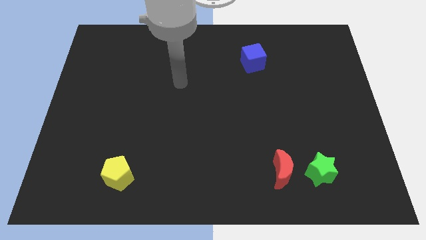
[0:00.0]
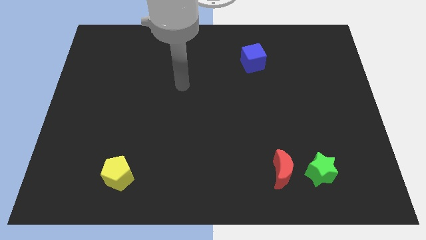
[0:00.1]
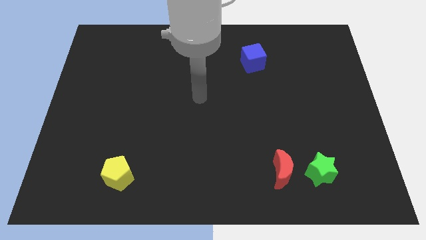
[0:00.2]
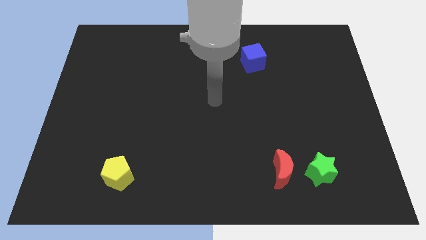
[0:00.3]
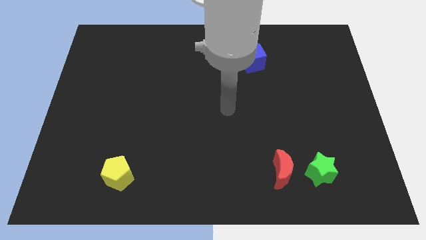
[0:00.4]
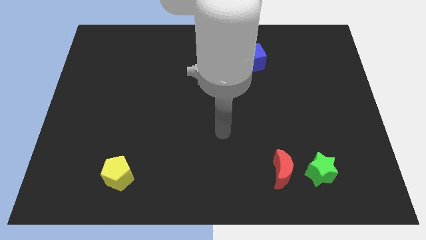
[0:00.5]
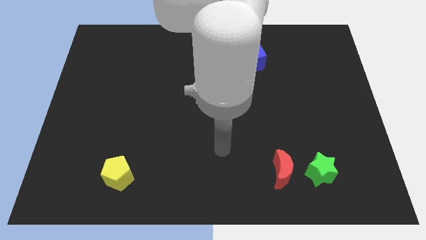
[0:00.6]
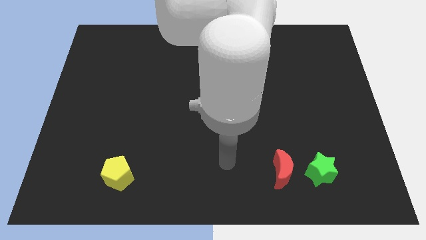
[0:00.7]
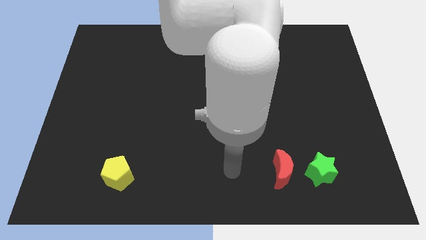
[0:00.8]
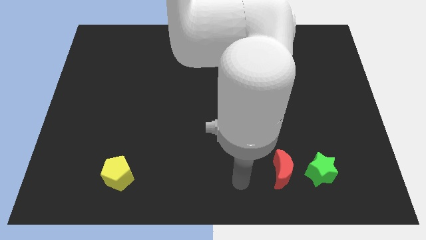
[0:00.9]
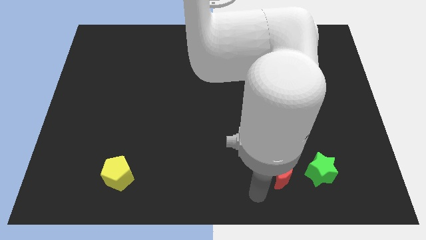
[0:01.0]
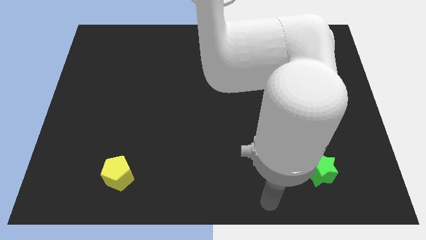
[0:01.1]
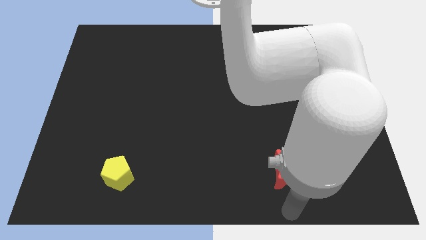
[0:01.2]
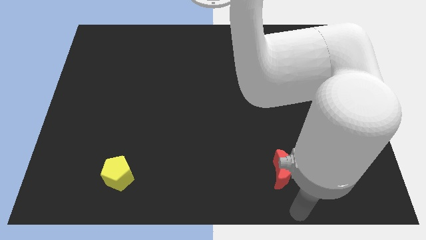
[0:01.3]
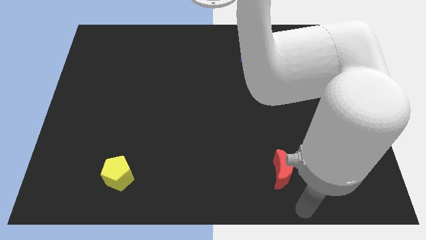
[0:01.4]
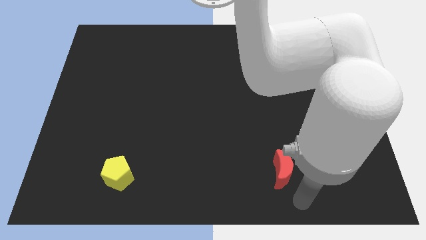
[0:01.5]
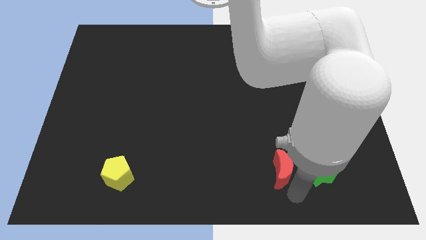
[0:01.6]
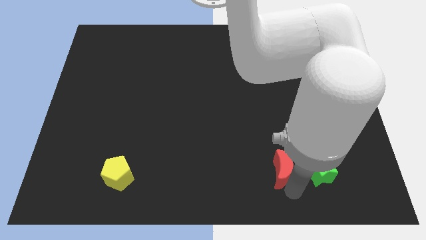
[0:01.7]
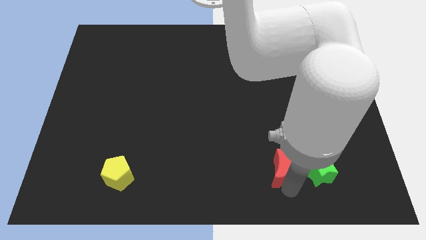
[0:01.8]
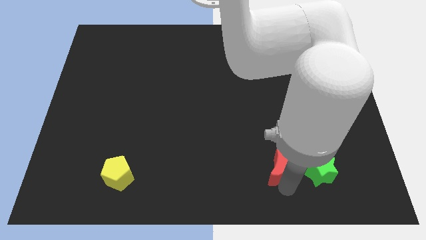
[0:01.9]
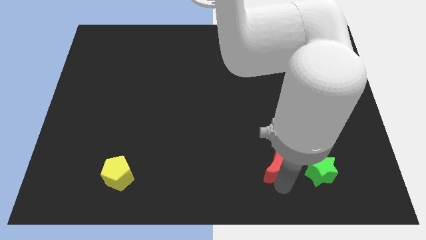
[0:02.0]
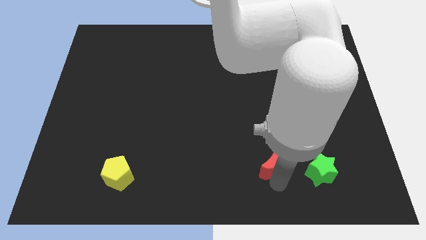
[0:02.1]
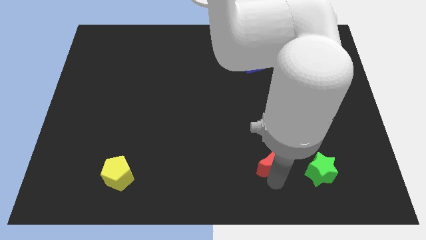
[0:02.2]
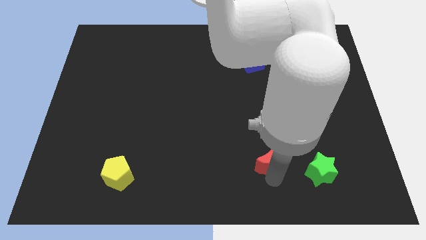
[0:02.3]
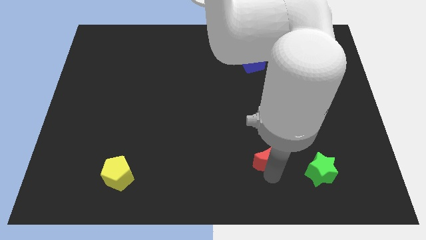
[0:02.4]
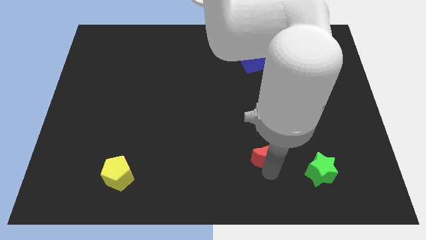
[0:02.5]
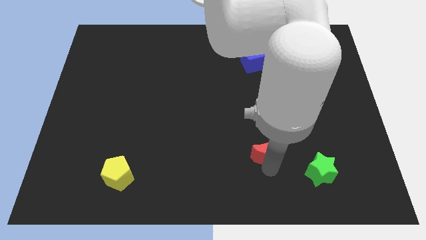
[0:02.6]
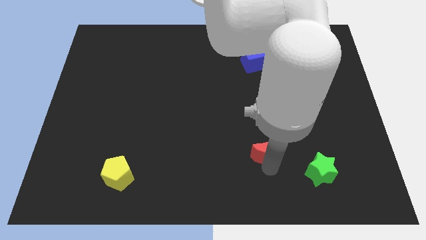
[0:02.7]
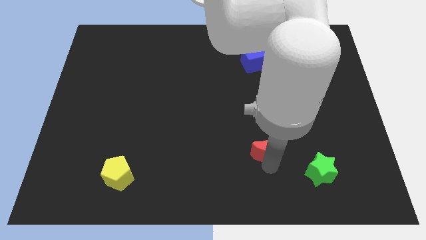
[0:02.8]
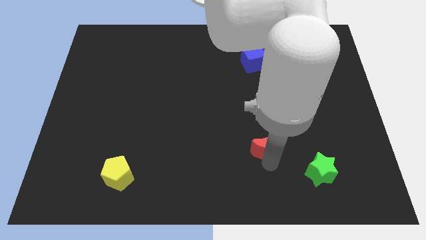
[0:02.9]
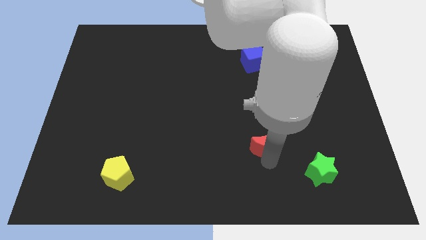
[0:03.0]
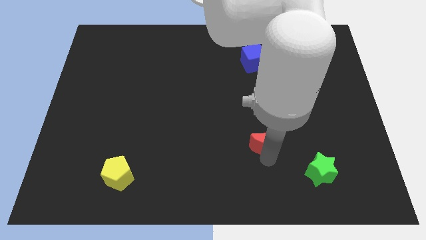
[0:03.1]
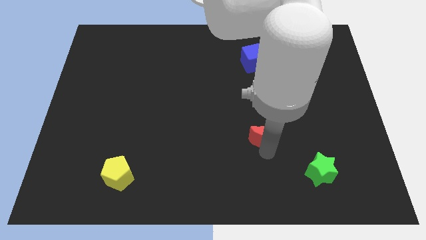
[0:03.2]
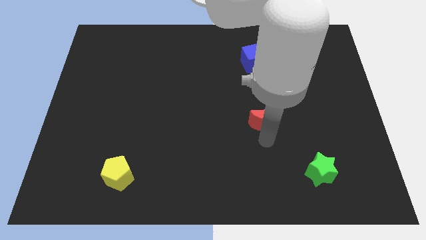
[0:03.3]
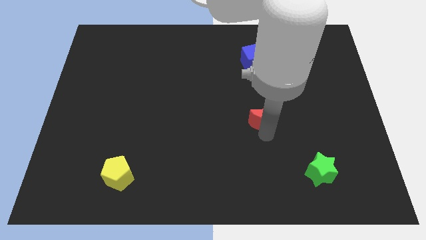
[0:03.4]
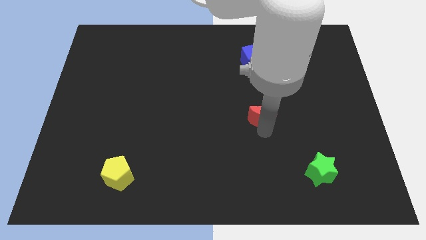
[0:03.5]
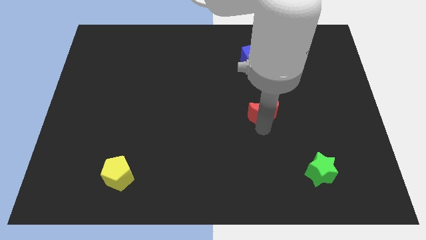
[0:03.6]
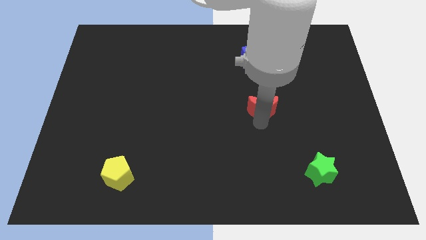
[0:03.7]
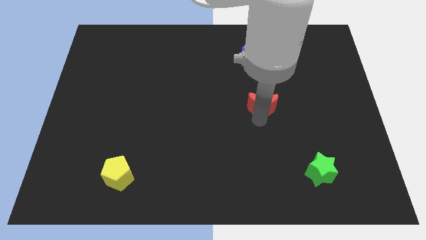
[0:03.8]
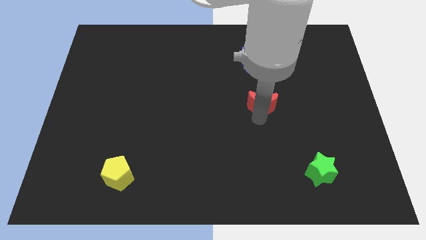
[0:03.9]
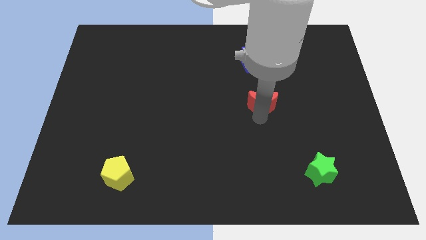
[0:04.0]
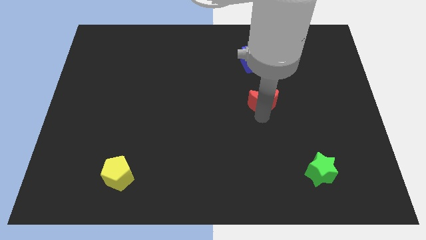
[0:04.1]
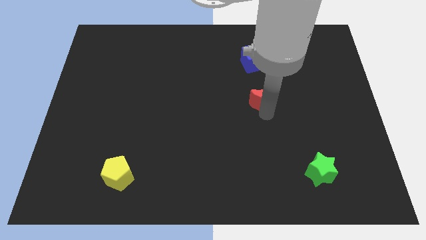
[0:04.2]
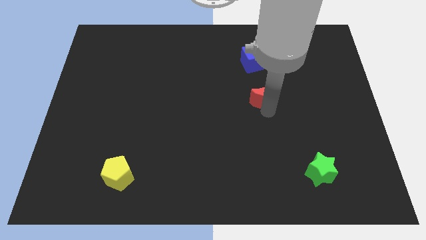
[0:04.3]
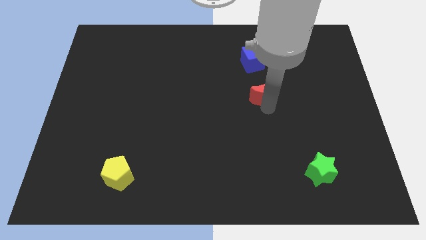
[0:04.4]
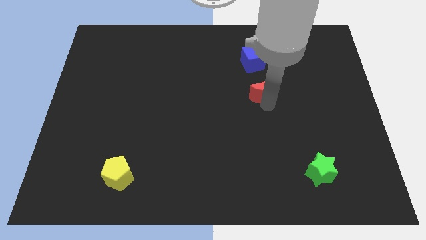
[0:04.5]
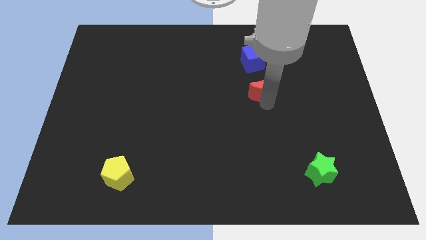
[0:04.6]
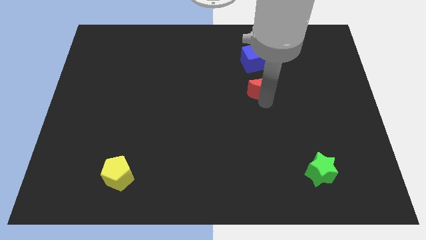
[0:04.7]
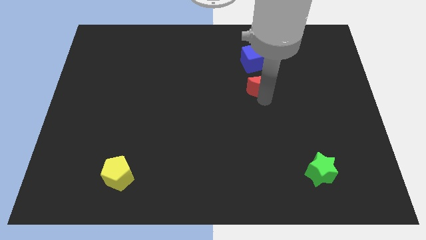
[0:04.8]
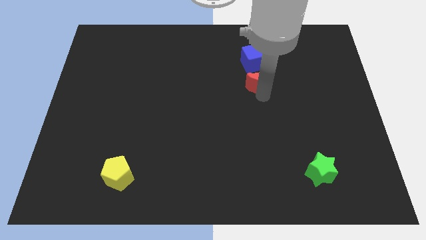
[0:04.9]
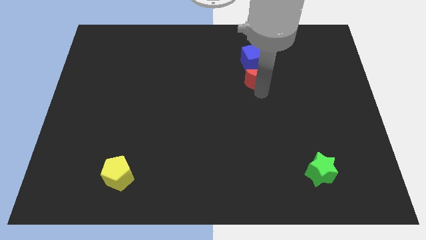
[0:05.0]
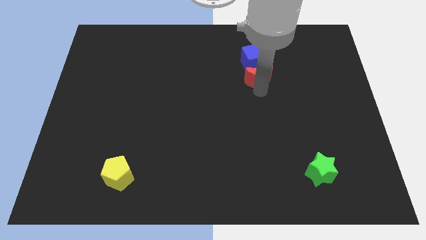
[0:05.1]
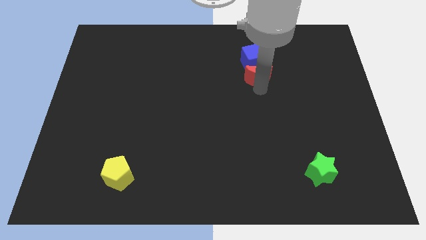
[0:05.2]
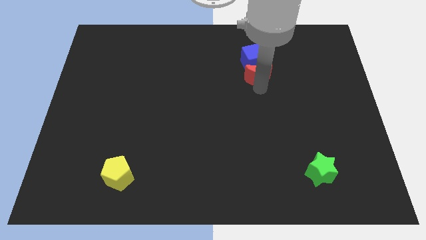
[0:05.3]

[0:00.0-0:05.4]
slide the moon towards the cube

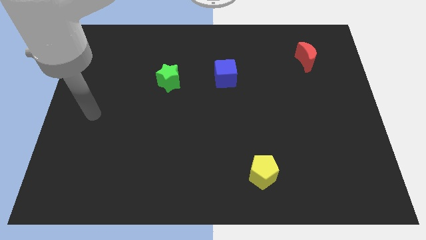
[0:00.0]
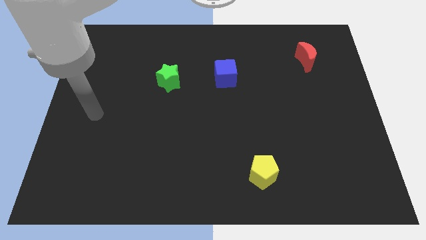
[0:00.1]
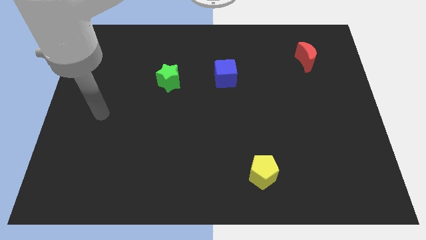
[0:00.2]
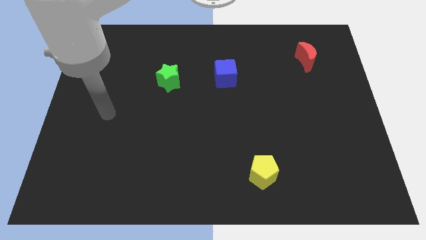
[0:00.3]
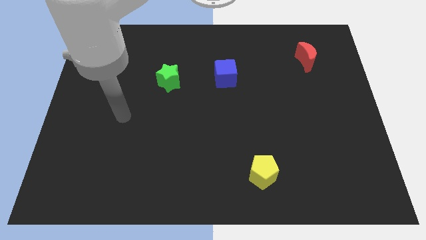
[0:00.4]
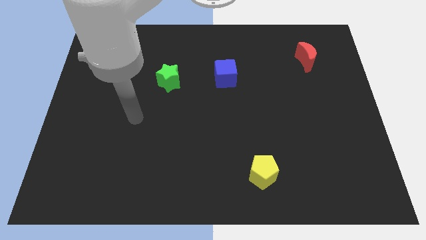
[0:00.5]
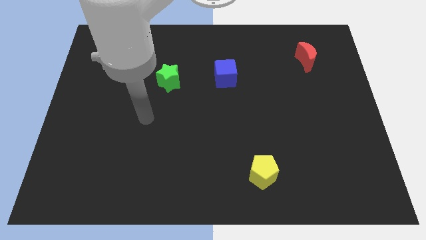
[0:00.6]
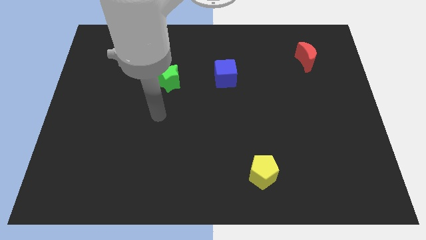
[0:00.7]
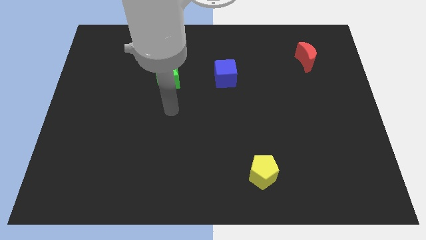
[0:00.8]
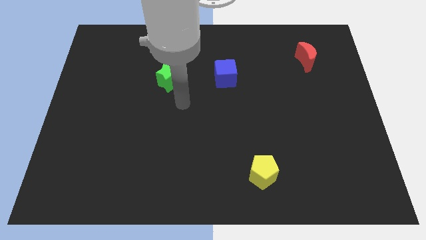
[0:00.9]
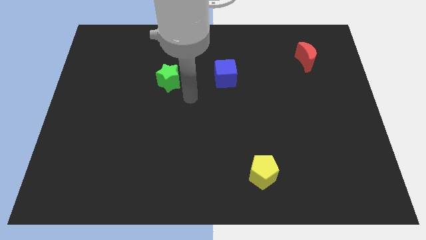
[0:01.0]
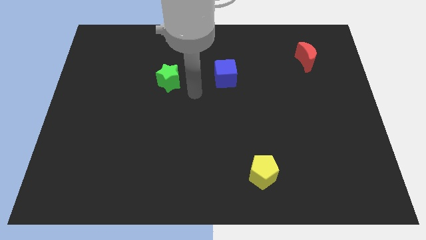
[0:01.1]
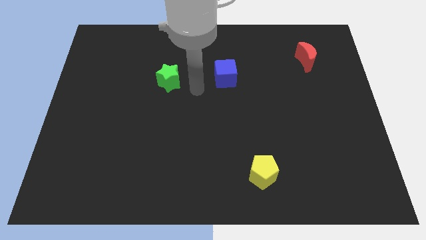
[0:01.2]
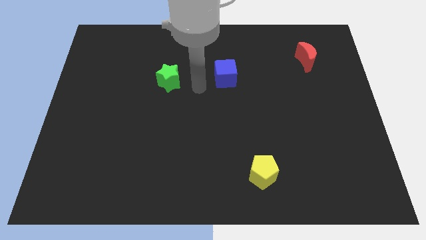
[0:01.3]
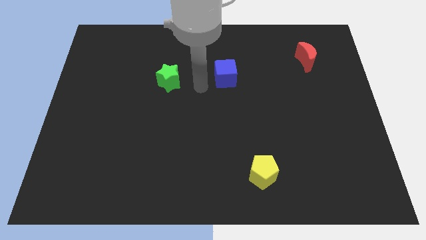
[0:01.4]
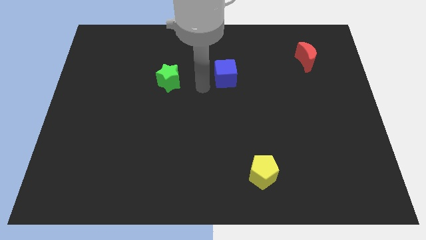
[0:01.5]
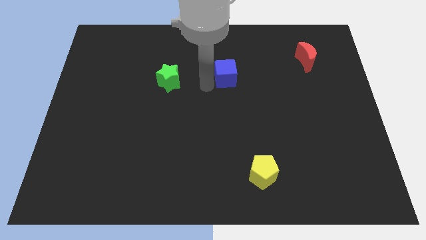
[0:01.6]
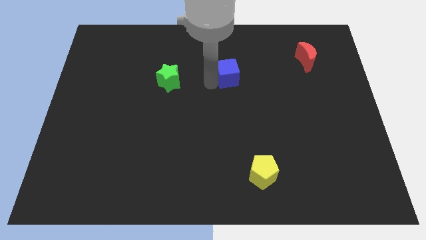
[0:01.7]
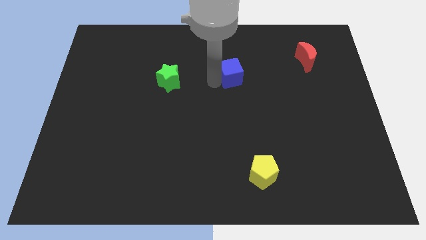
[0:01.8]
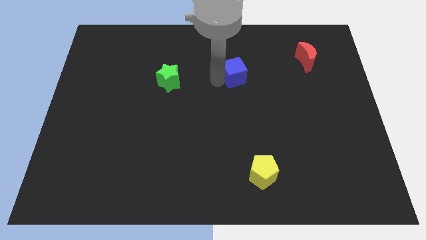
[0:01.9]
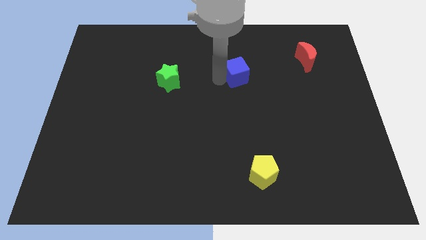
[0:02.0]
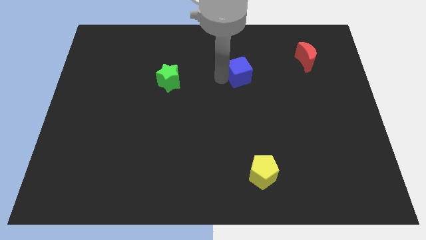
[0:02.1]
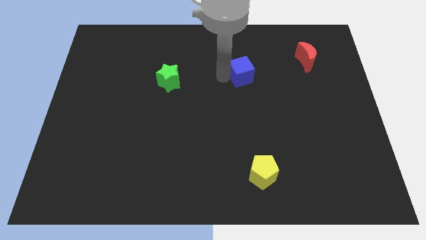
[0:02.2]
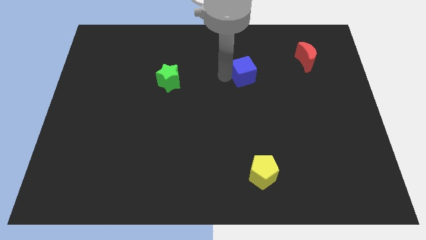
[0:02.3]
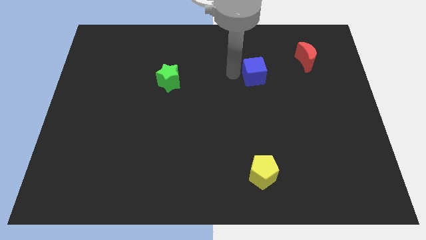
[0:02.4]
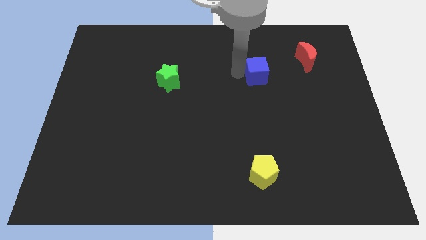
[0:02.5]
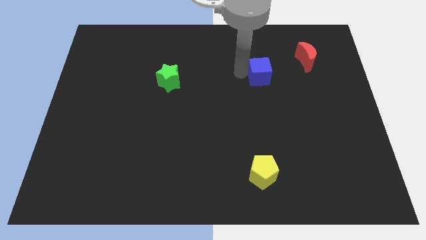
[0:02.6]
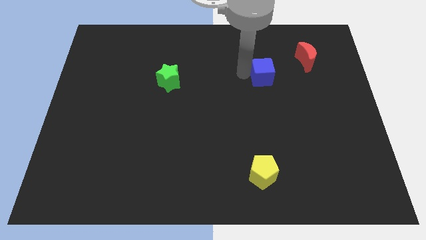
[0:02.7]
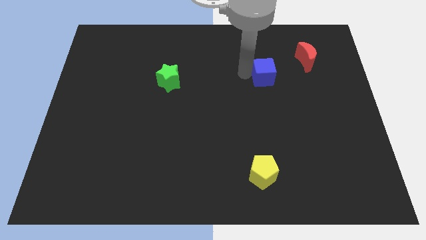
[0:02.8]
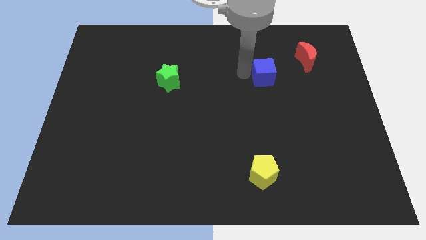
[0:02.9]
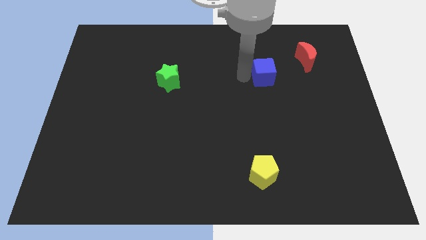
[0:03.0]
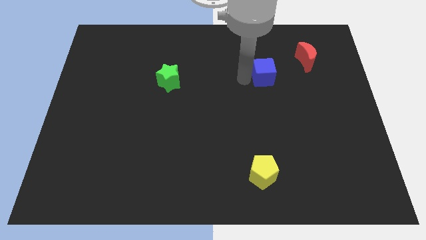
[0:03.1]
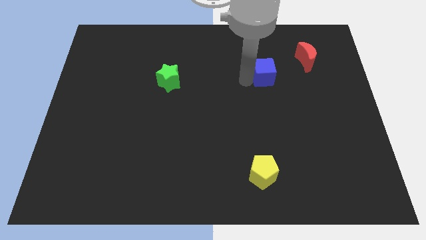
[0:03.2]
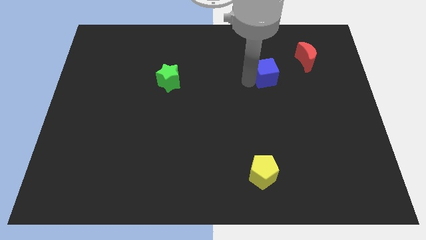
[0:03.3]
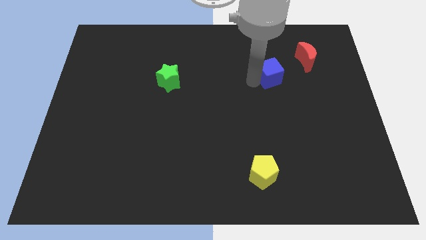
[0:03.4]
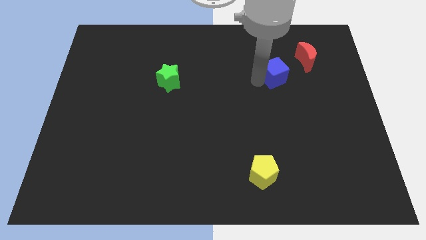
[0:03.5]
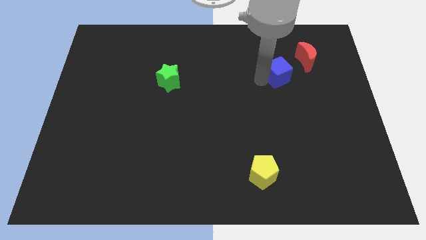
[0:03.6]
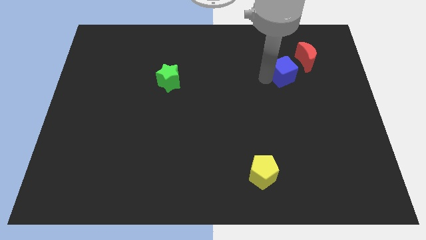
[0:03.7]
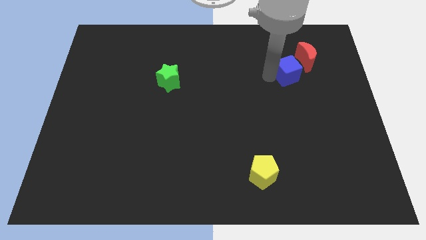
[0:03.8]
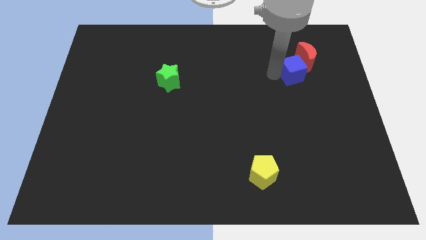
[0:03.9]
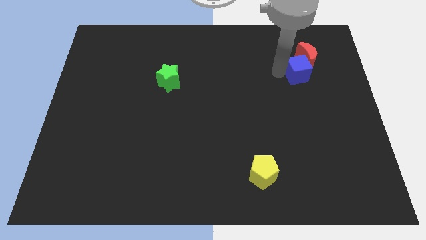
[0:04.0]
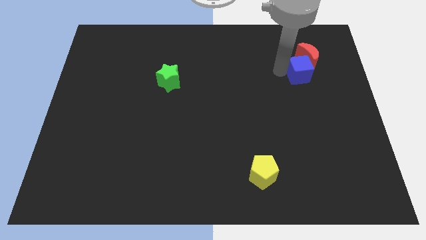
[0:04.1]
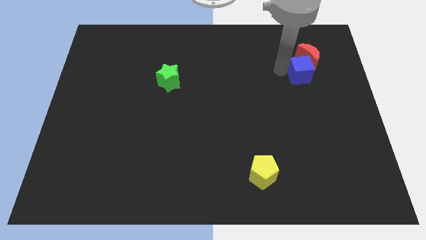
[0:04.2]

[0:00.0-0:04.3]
put the cube next to the red block
